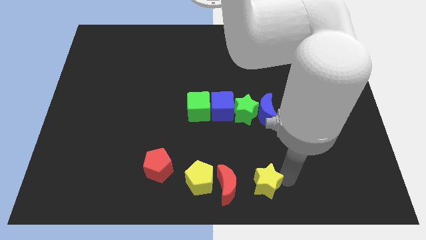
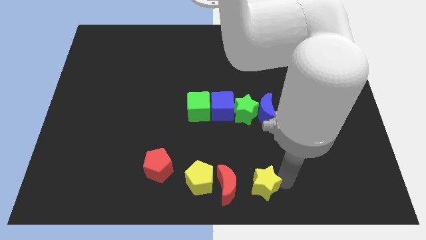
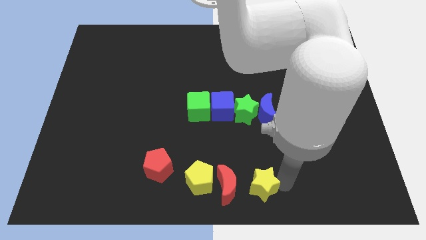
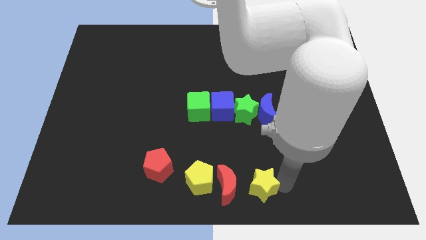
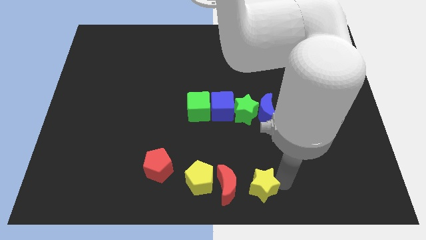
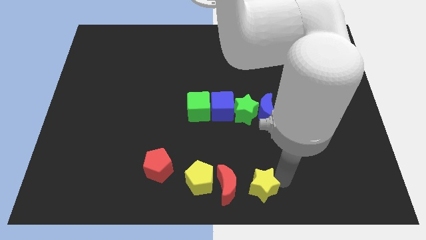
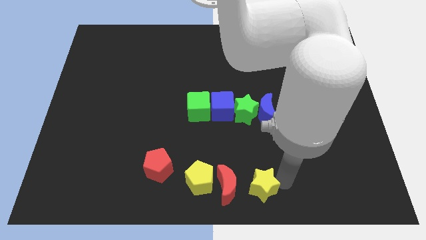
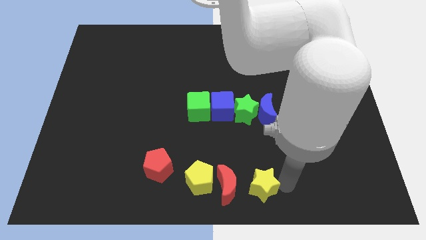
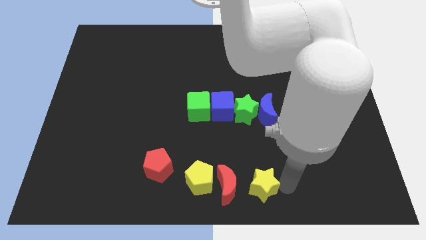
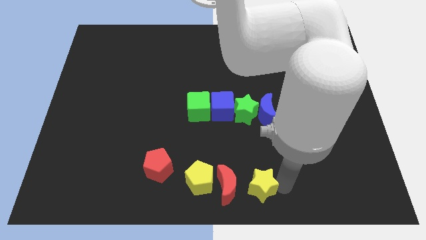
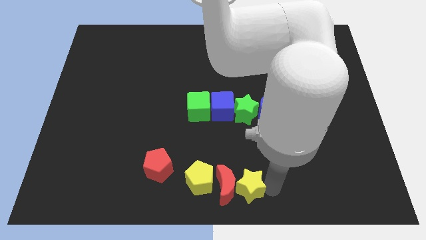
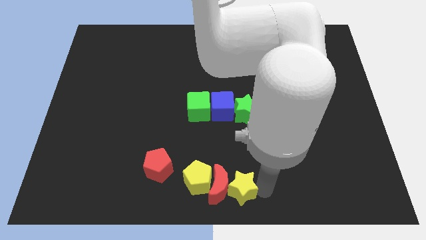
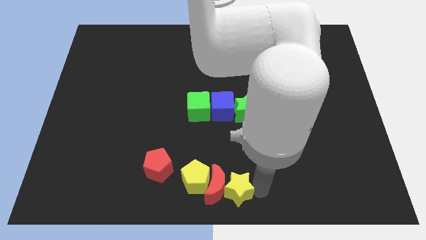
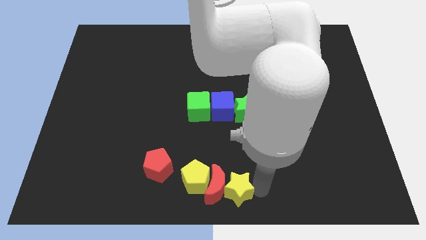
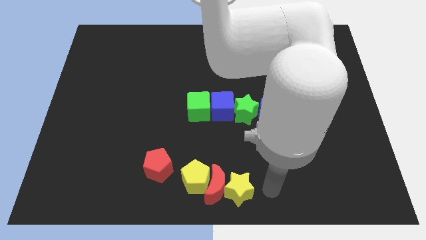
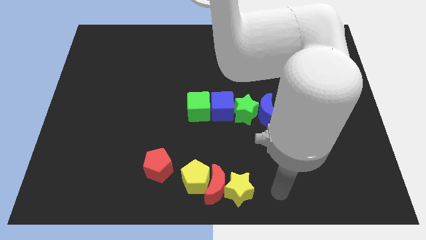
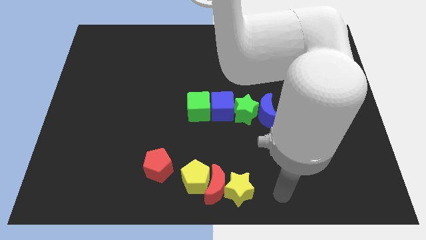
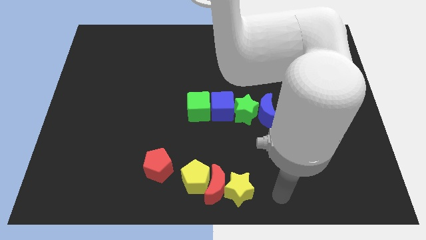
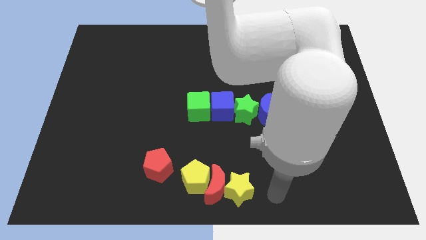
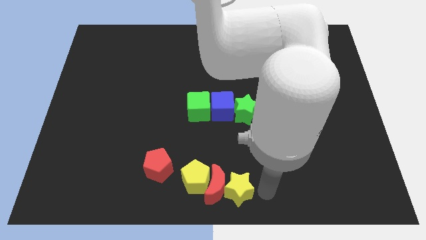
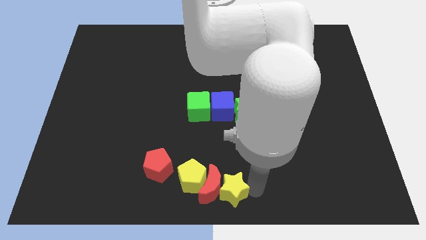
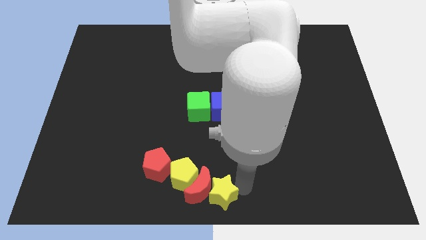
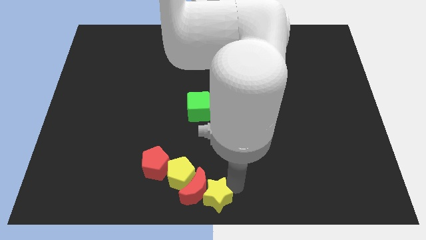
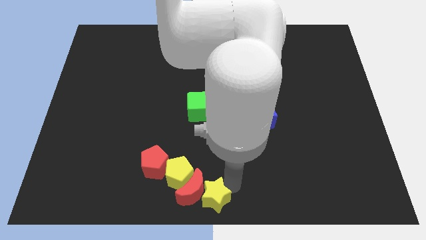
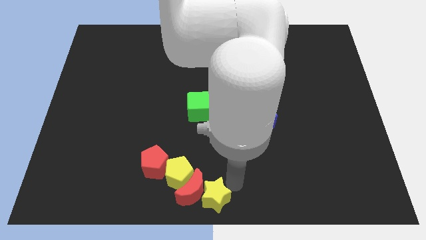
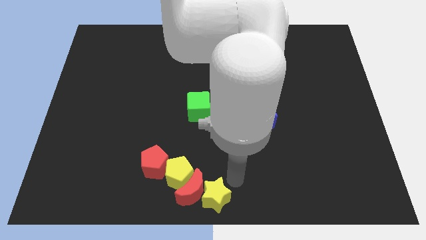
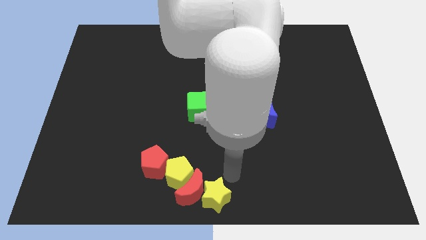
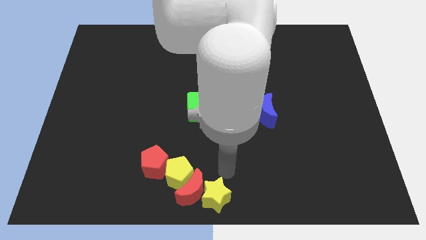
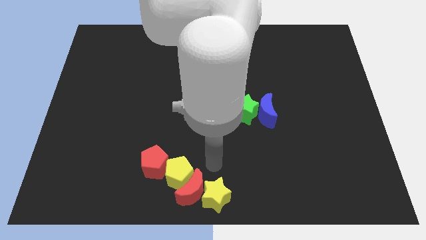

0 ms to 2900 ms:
slide the yellow star into the red crescent

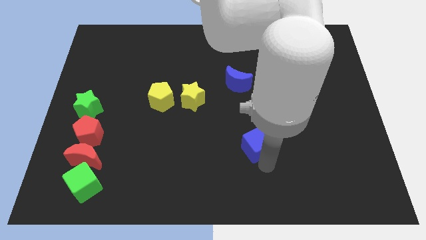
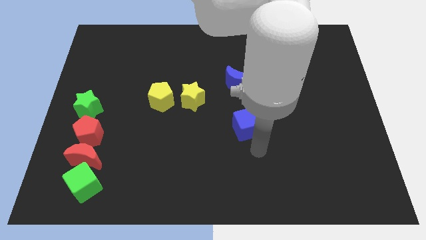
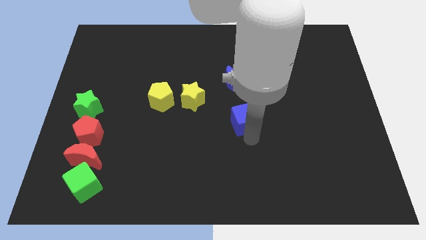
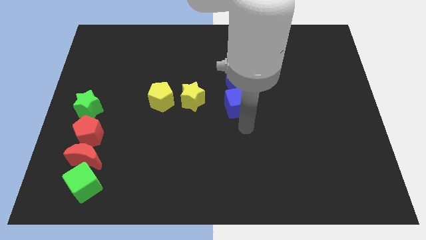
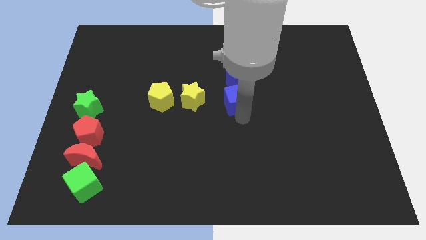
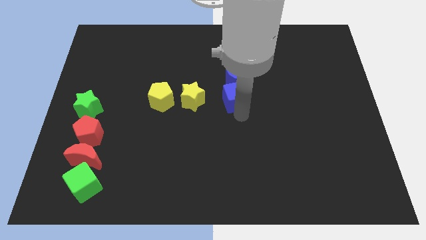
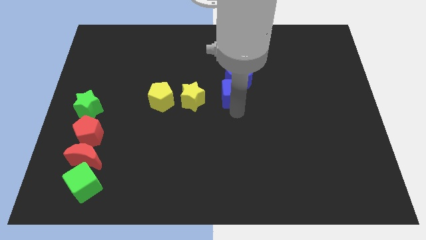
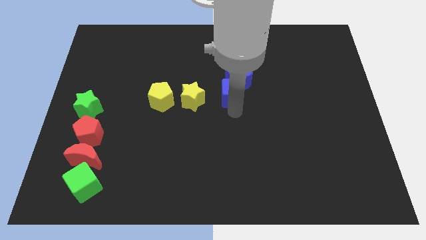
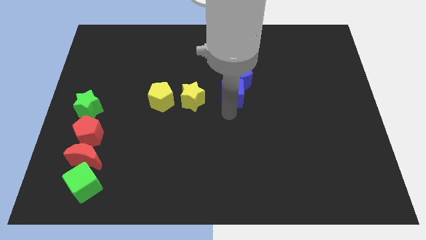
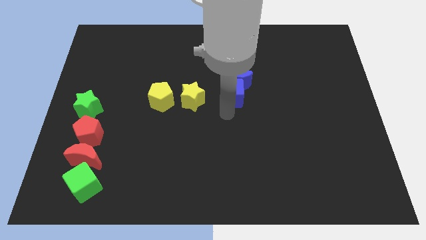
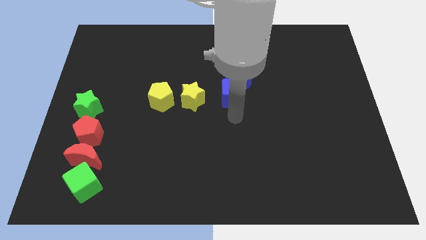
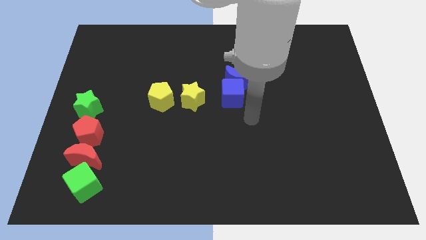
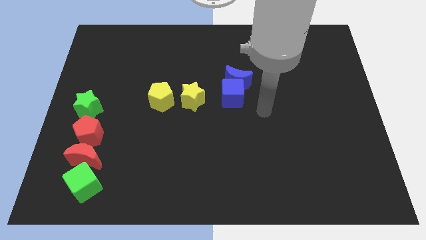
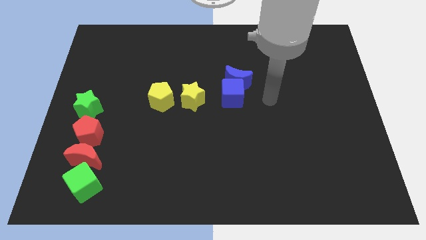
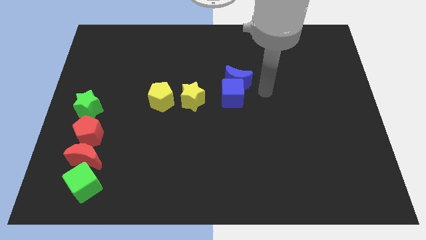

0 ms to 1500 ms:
push the blue cube into the blue crescent

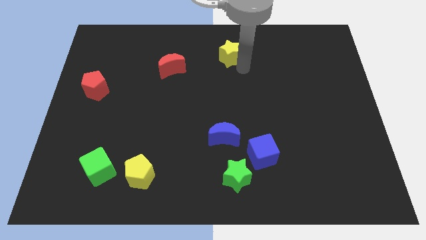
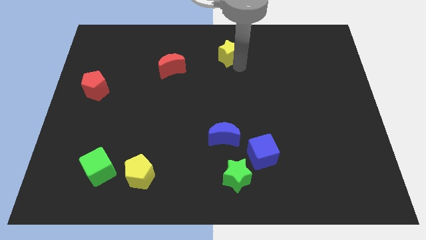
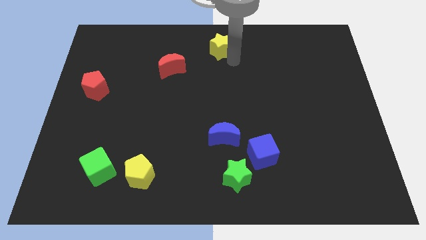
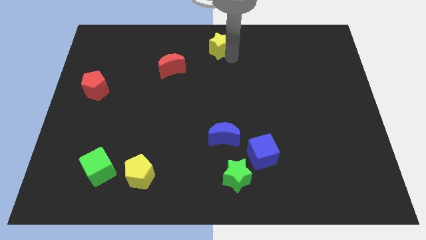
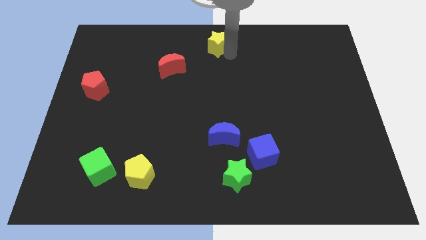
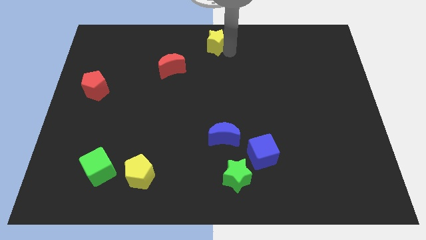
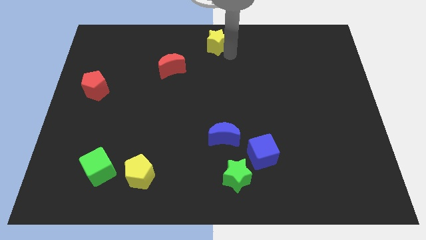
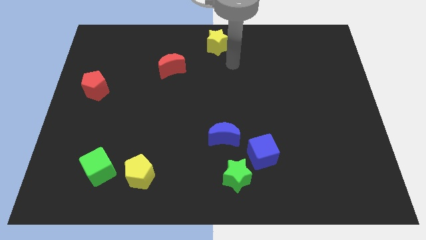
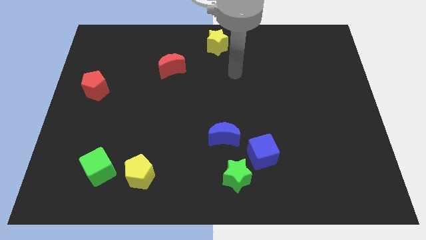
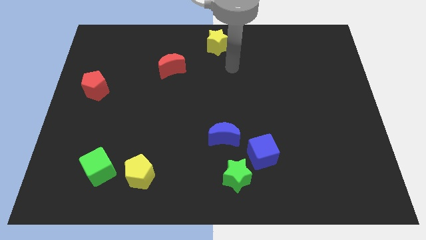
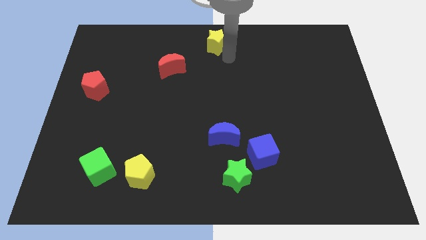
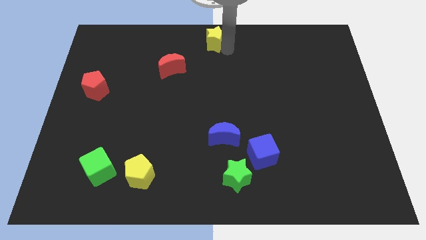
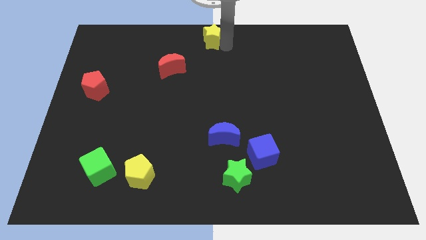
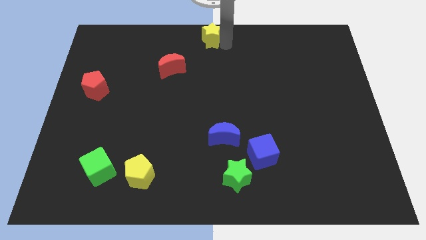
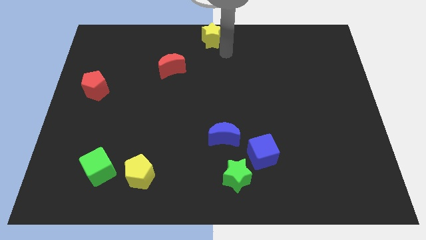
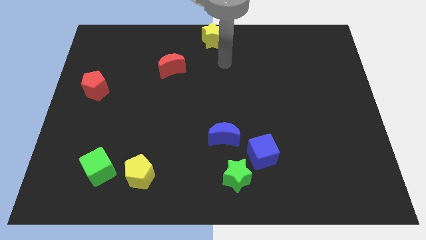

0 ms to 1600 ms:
move the yellow star to the top middle of the board

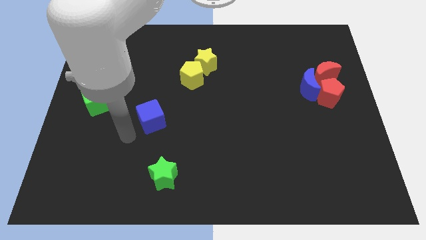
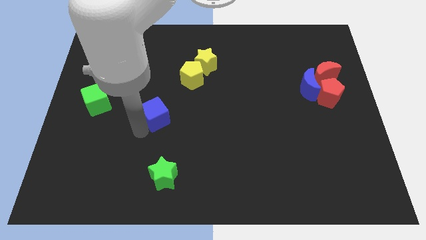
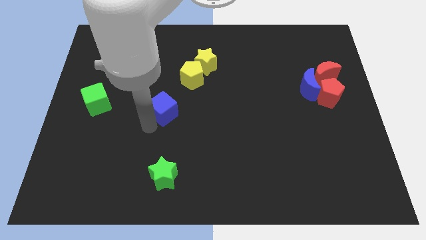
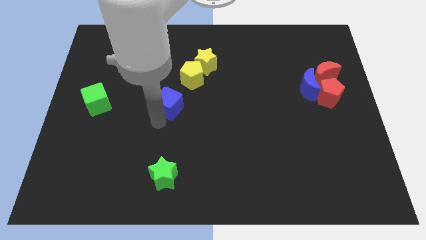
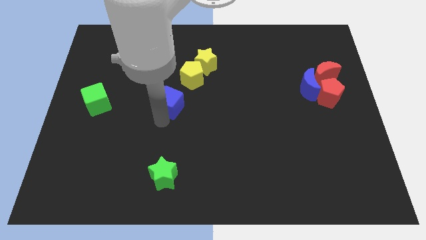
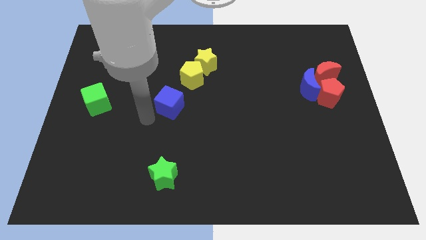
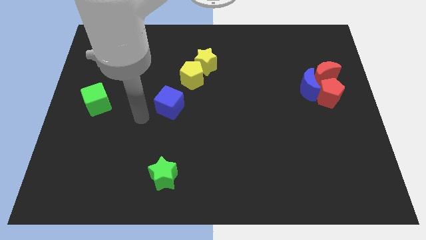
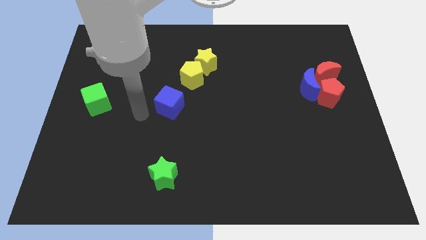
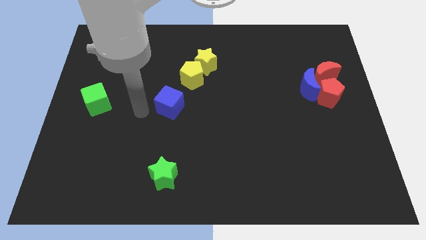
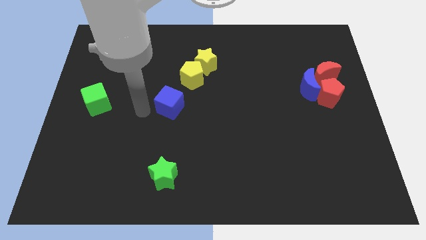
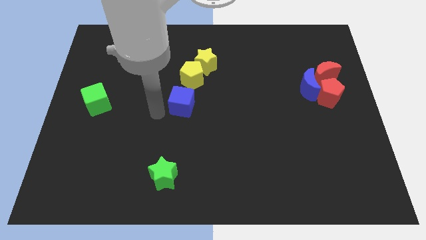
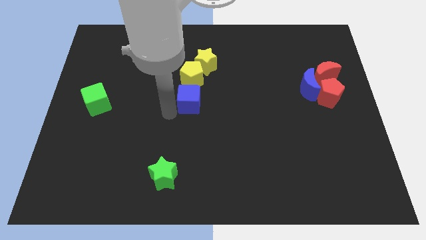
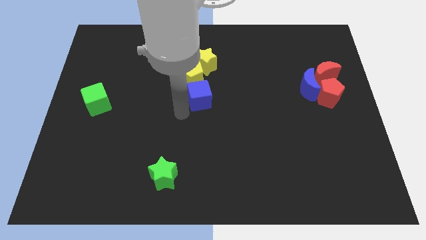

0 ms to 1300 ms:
place blue moon to the bottom of yellow pentagon

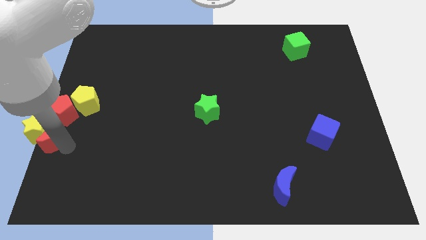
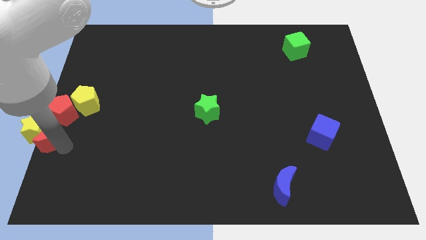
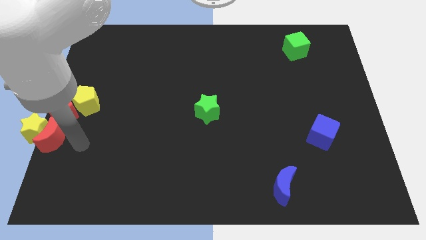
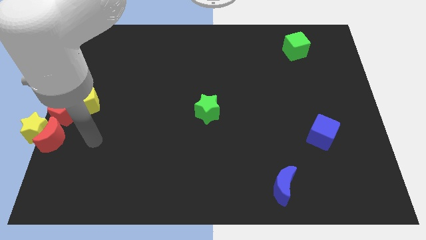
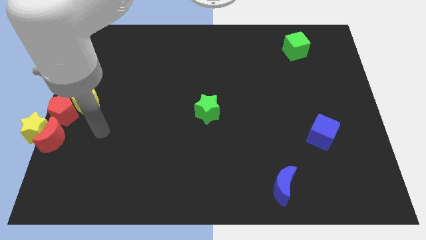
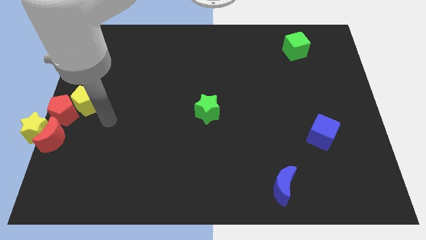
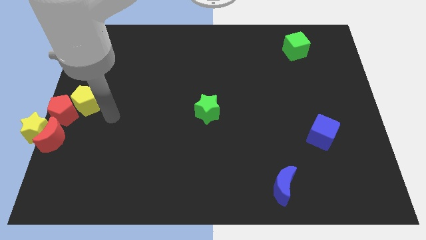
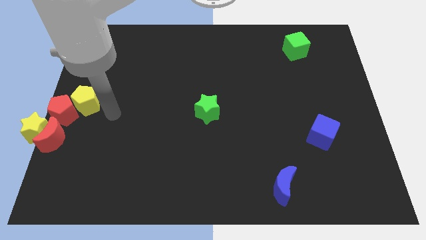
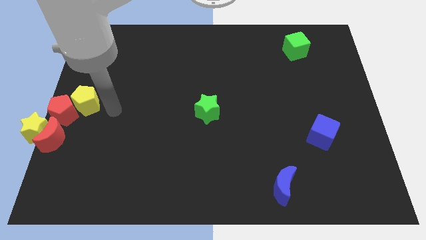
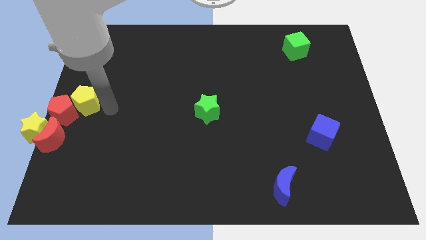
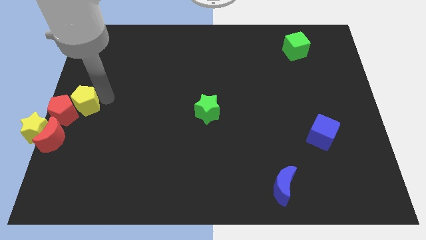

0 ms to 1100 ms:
move your arm away from the red moon

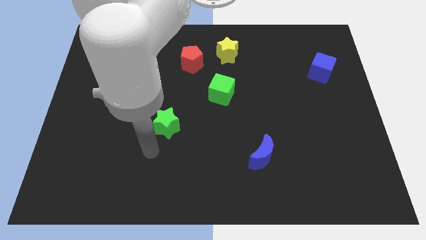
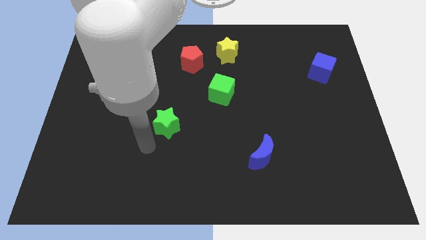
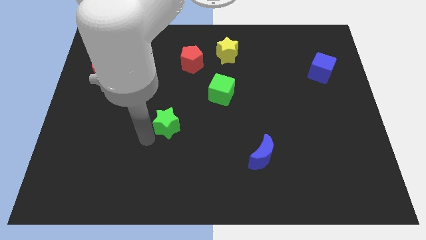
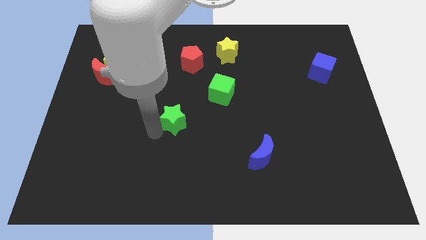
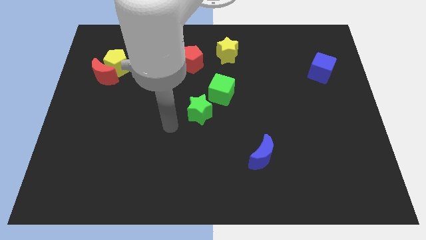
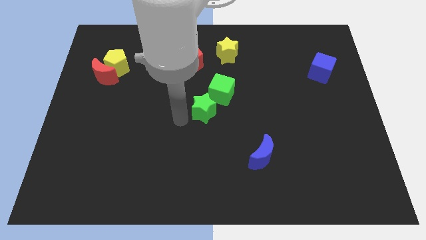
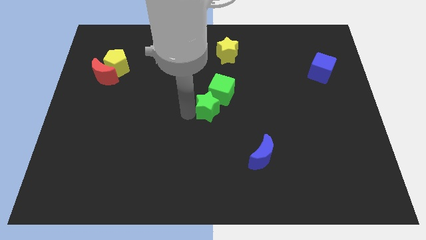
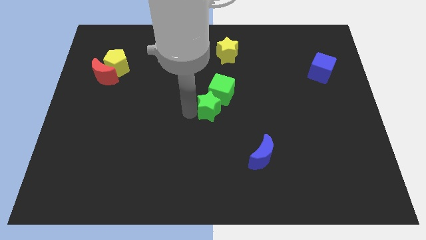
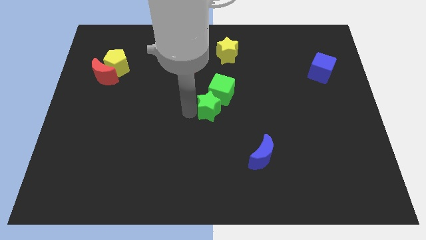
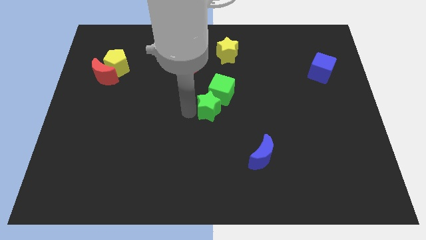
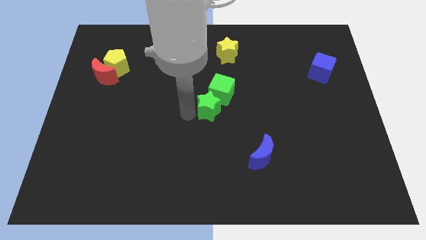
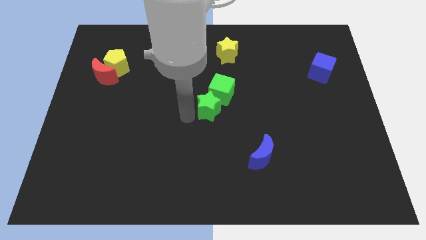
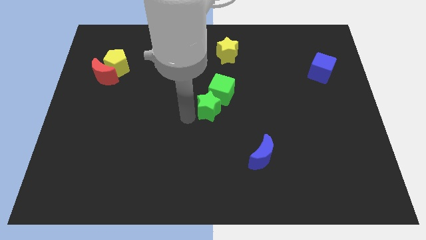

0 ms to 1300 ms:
move the green star towards the bottom of the green cube
